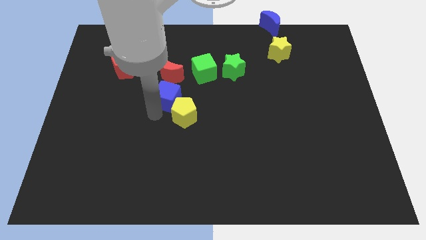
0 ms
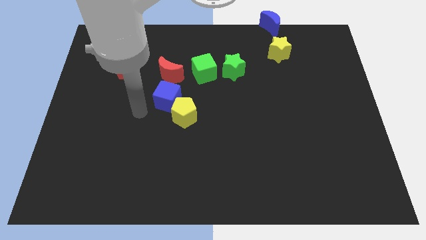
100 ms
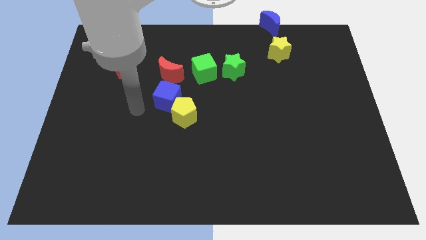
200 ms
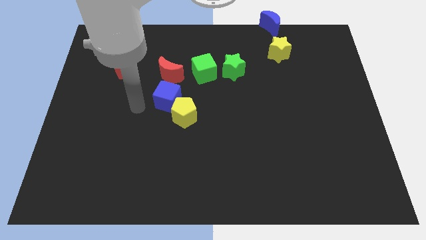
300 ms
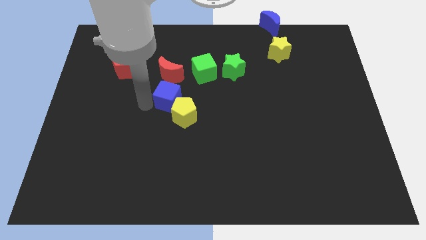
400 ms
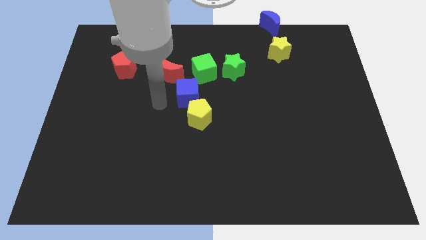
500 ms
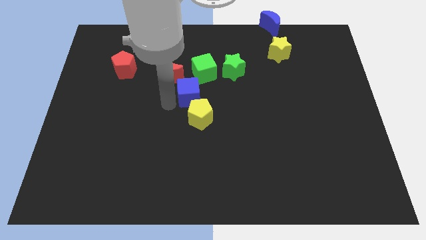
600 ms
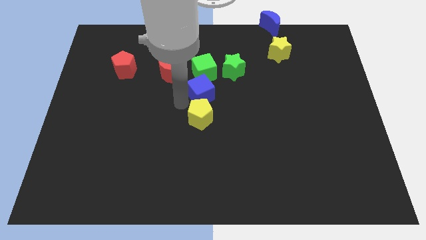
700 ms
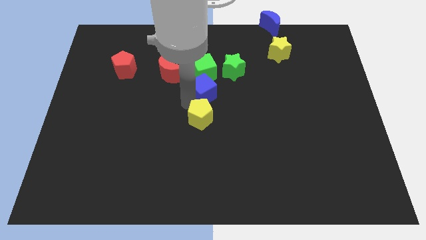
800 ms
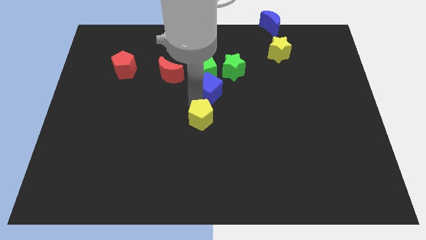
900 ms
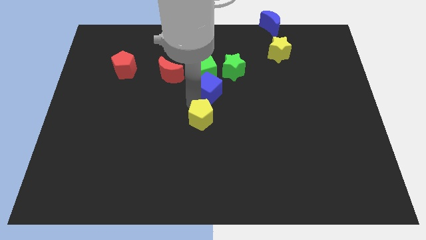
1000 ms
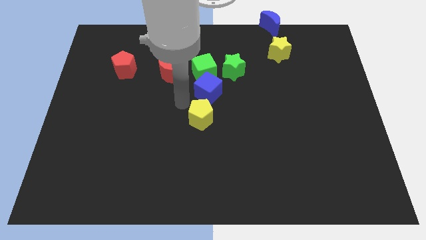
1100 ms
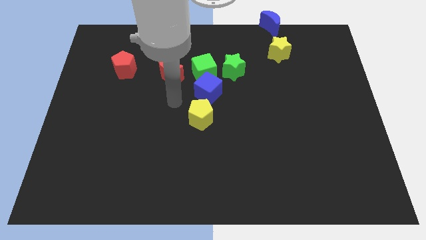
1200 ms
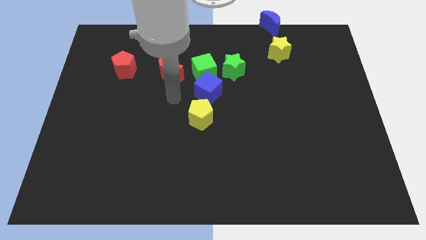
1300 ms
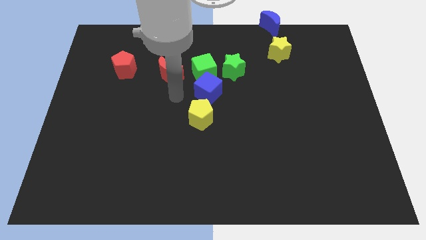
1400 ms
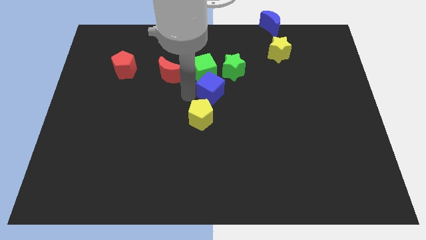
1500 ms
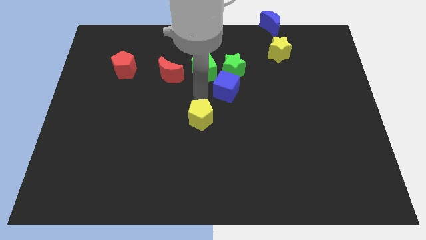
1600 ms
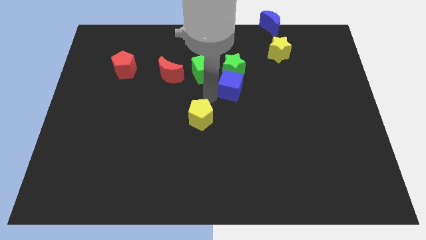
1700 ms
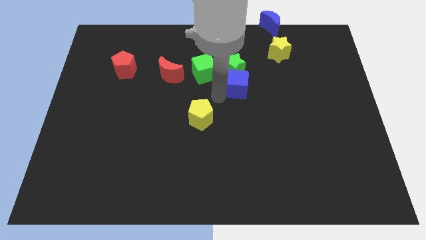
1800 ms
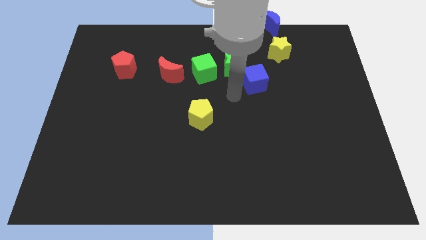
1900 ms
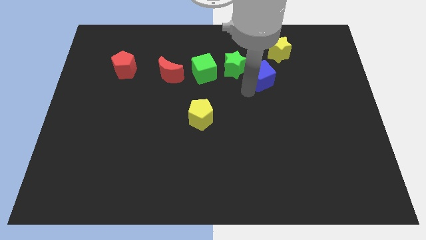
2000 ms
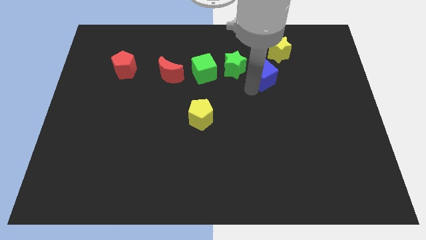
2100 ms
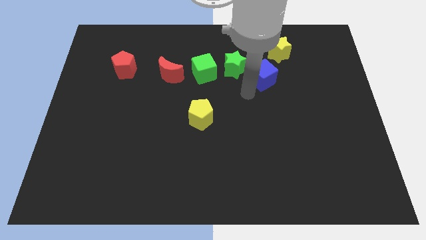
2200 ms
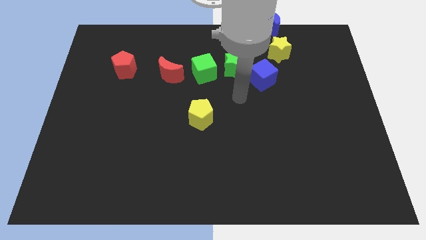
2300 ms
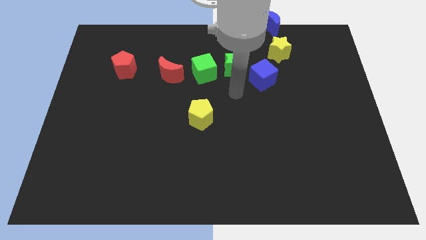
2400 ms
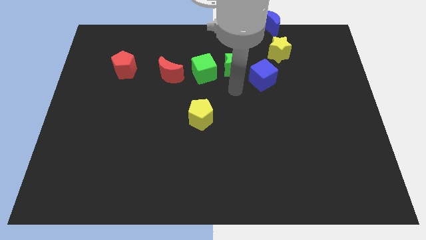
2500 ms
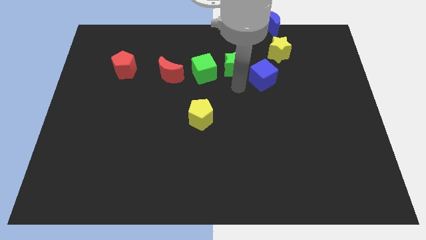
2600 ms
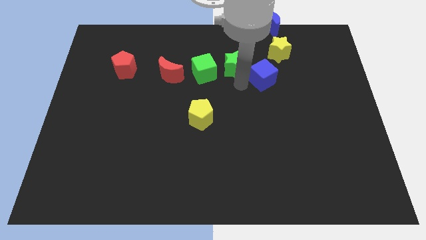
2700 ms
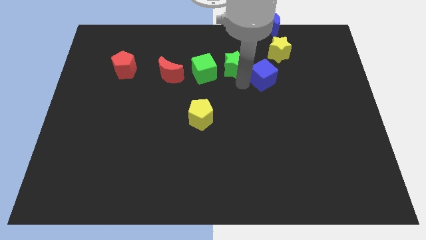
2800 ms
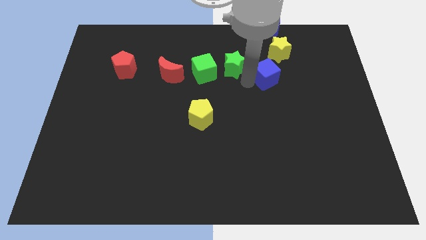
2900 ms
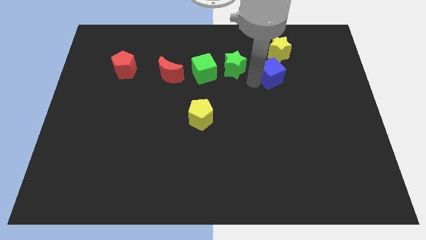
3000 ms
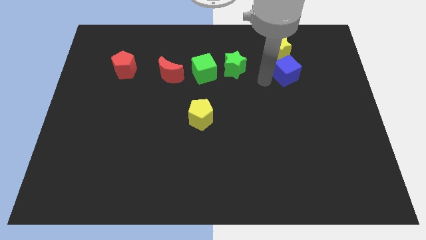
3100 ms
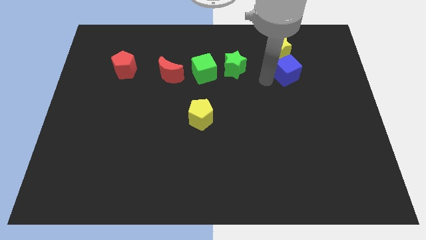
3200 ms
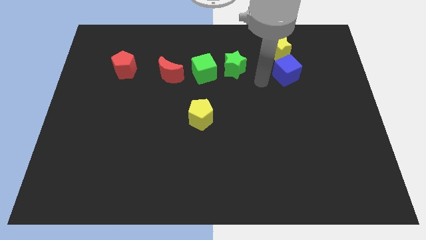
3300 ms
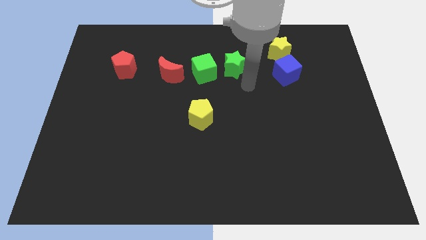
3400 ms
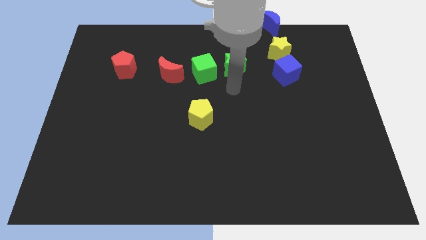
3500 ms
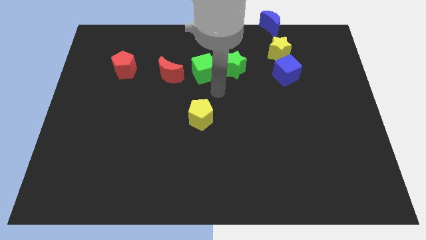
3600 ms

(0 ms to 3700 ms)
push the blue cube below the yellow star

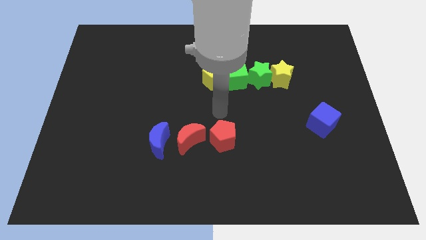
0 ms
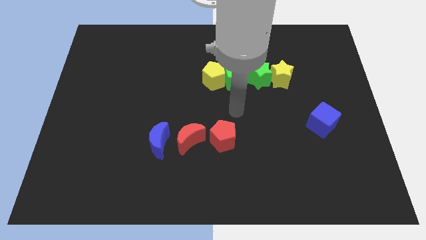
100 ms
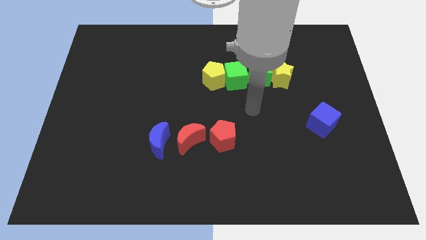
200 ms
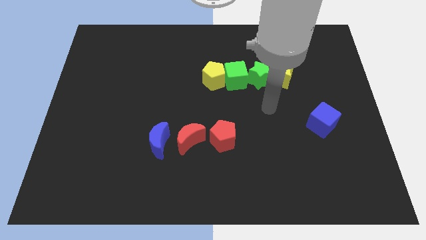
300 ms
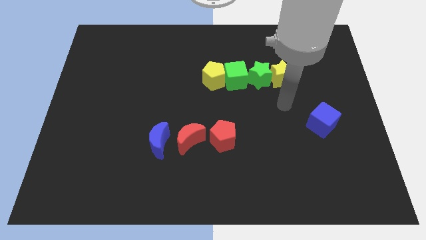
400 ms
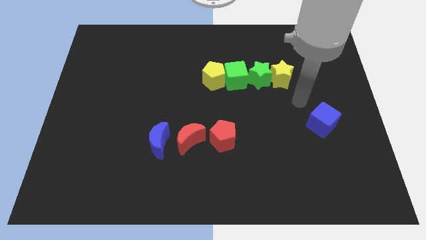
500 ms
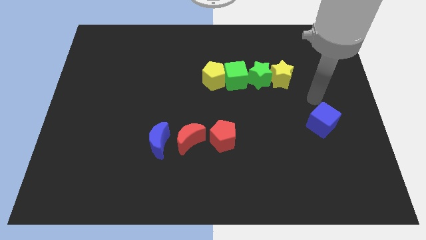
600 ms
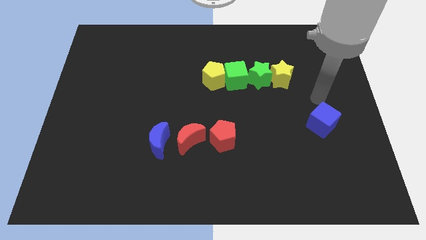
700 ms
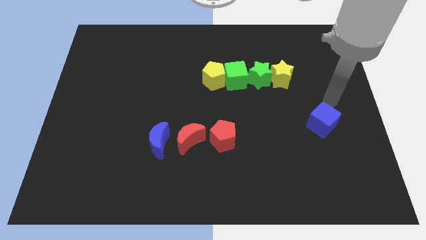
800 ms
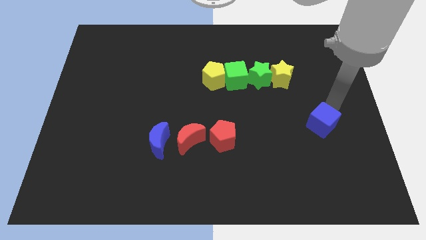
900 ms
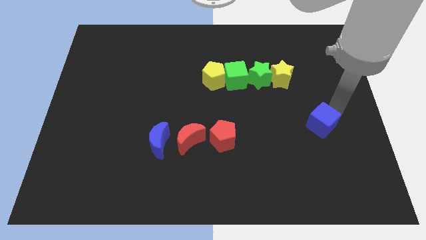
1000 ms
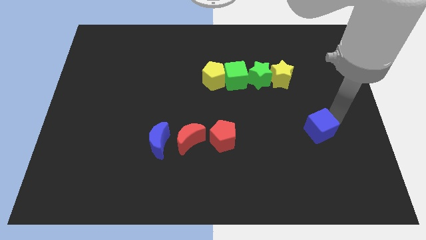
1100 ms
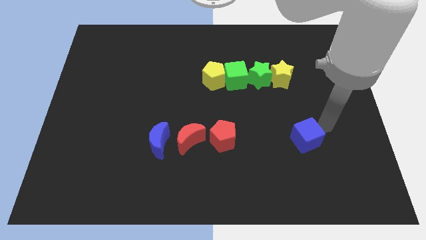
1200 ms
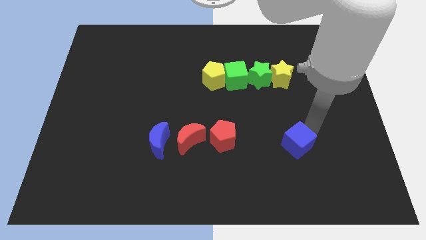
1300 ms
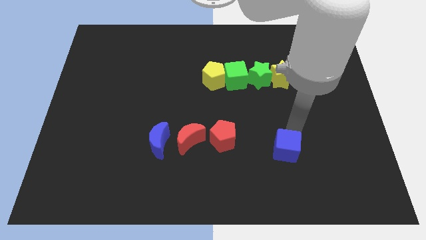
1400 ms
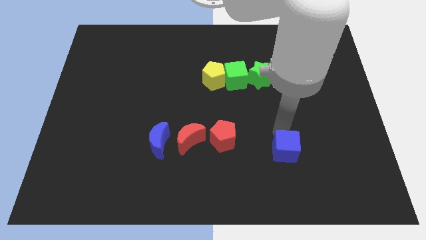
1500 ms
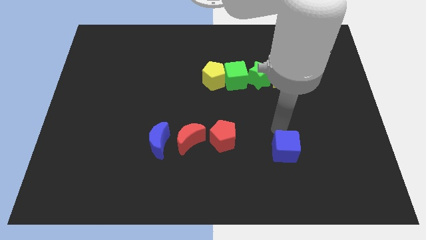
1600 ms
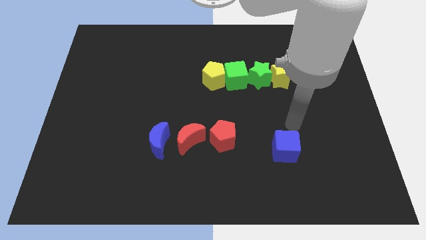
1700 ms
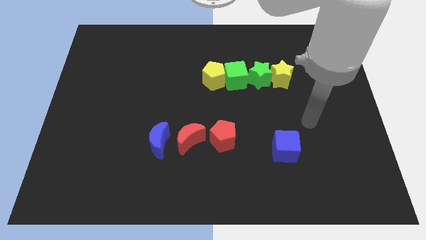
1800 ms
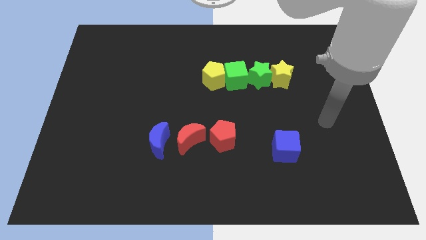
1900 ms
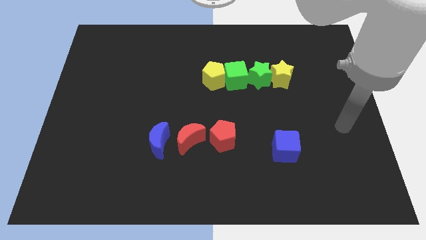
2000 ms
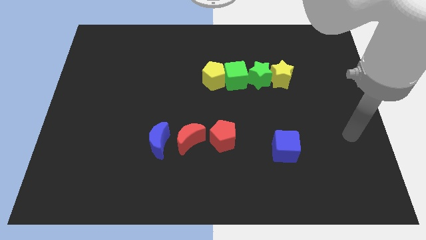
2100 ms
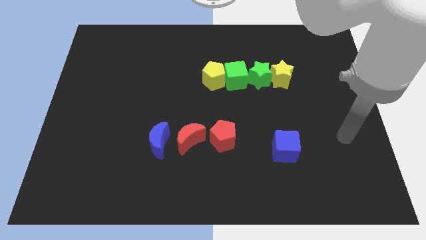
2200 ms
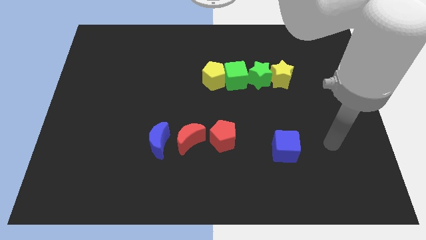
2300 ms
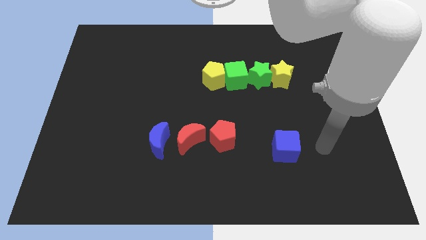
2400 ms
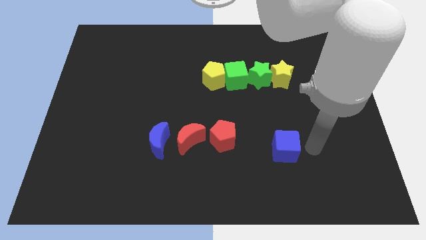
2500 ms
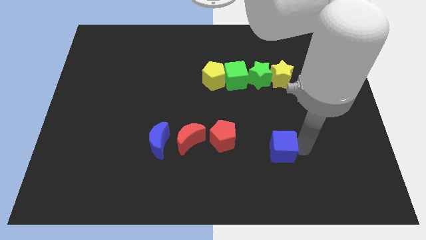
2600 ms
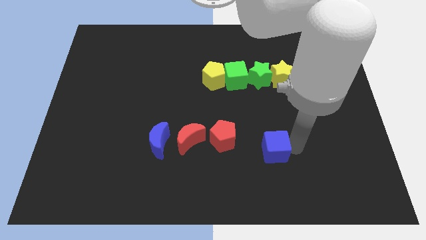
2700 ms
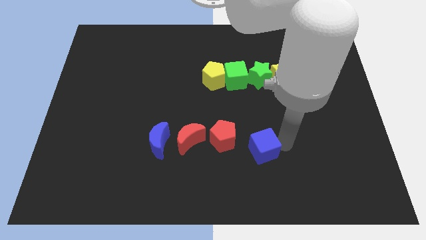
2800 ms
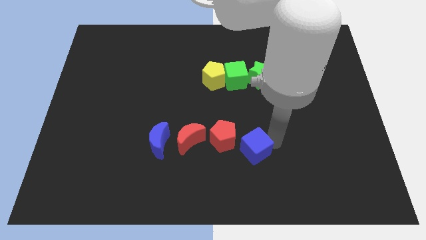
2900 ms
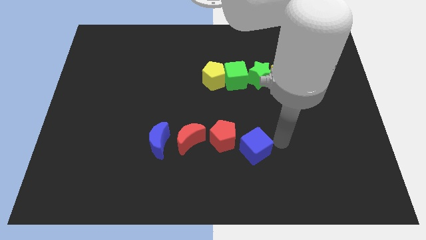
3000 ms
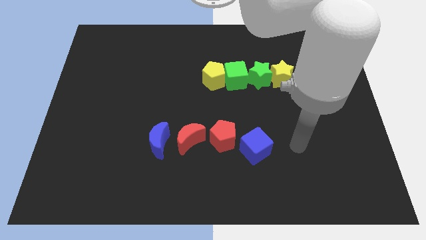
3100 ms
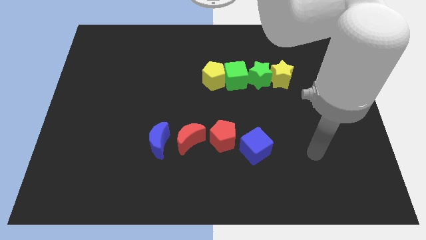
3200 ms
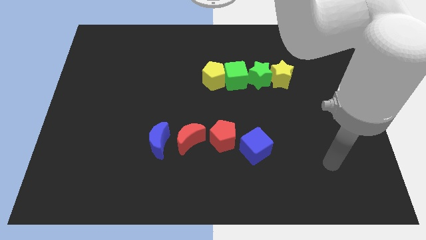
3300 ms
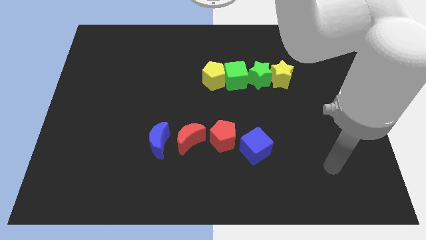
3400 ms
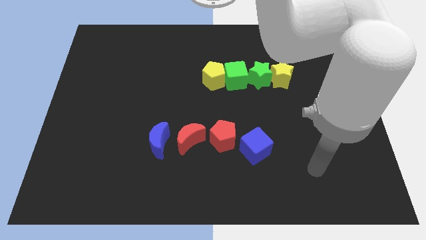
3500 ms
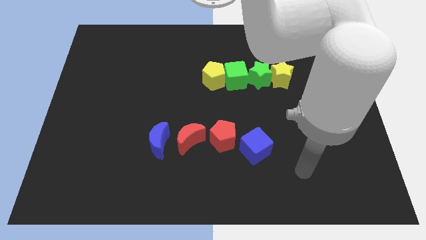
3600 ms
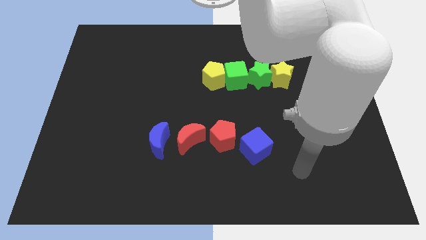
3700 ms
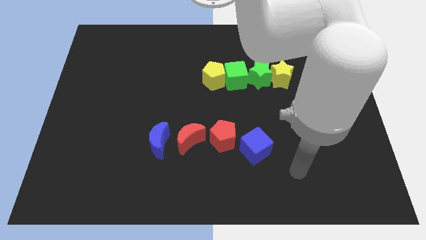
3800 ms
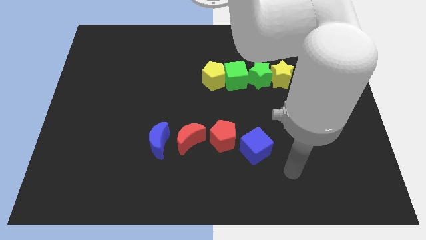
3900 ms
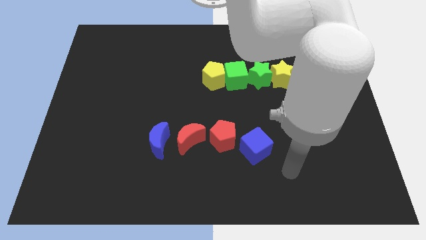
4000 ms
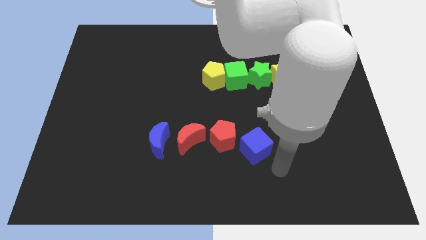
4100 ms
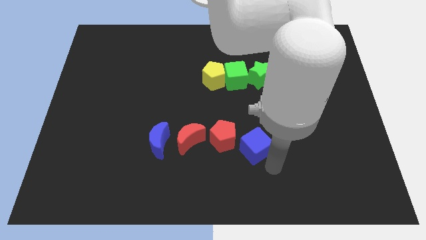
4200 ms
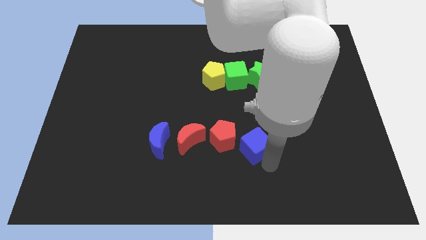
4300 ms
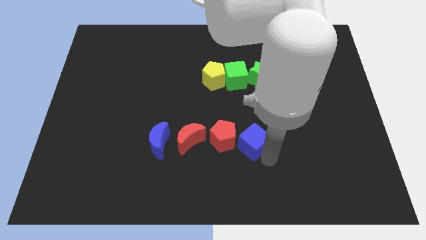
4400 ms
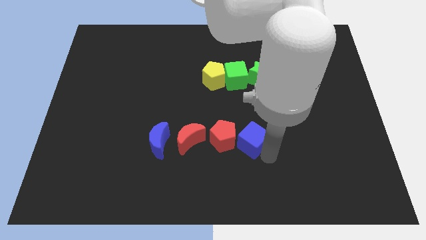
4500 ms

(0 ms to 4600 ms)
put the blue cube to the right of the red pentagon

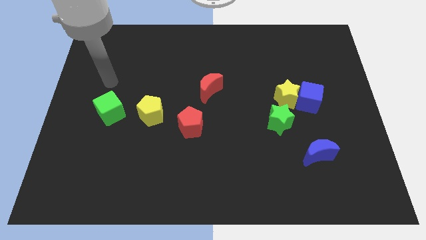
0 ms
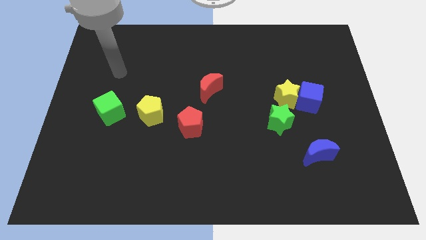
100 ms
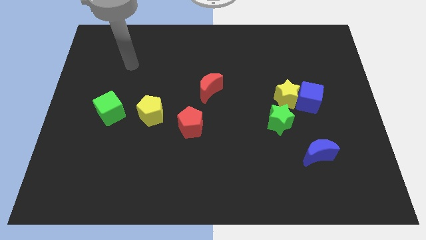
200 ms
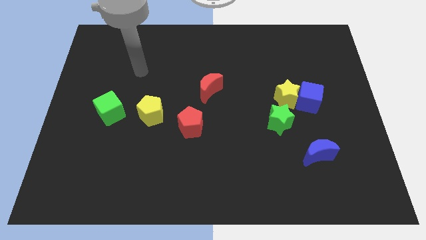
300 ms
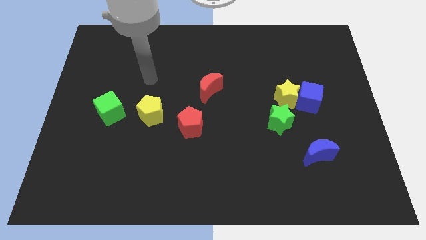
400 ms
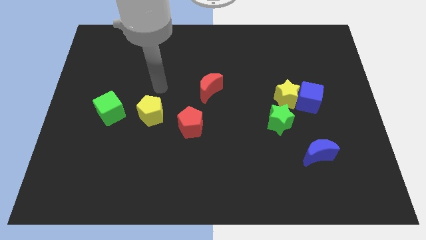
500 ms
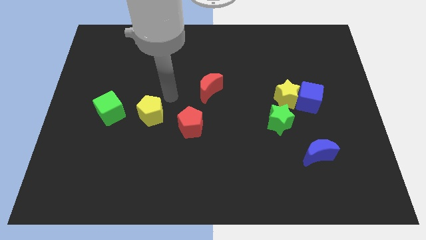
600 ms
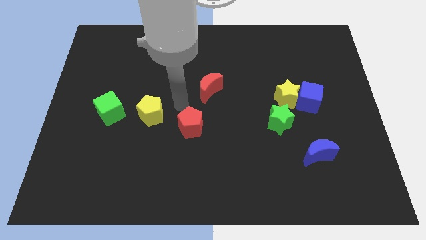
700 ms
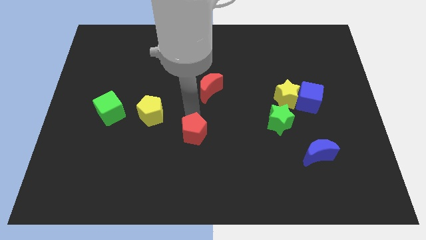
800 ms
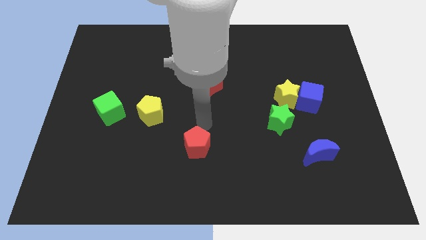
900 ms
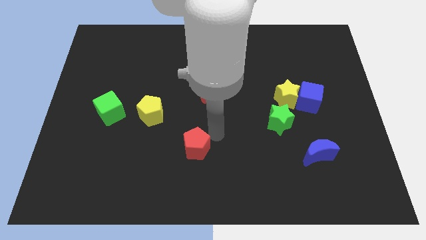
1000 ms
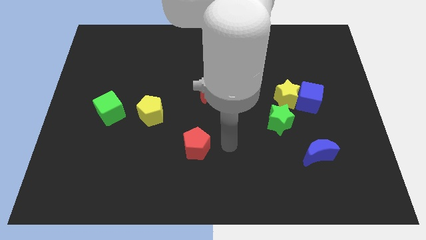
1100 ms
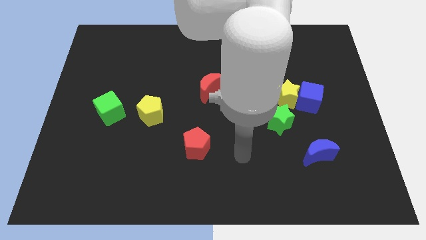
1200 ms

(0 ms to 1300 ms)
point your arm at the right of the red pentagon
